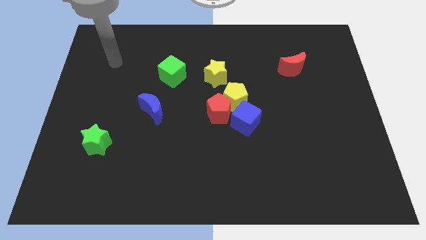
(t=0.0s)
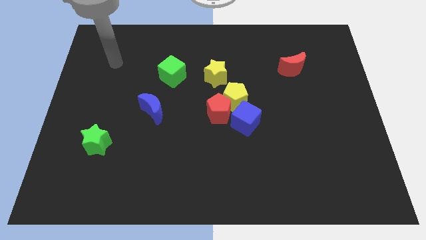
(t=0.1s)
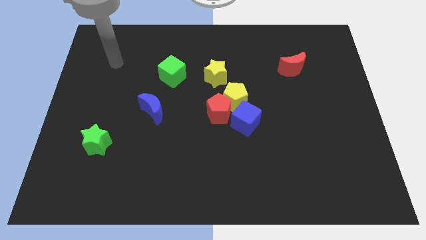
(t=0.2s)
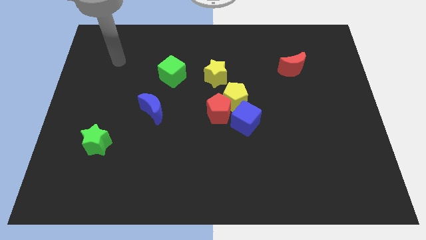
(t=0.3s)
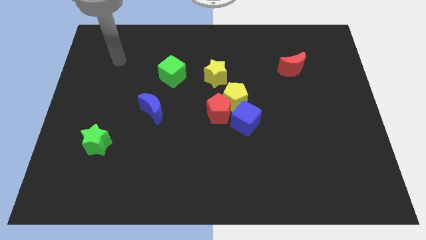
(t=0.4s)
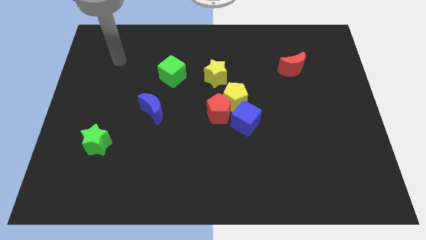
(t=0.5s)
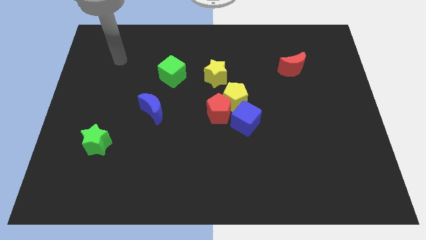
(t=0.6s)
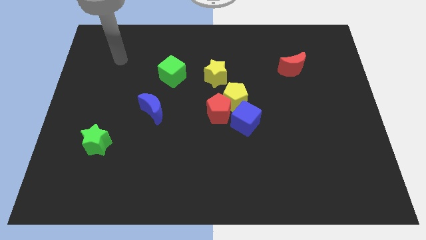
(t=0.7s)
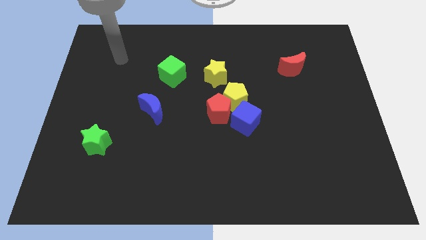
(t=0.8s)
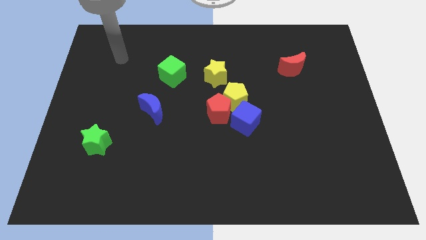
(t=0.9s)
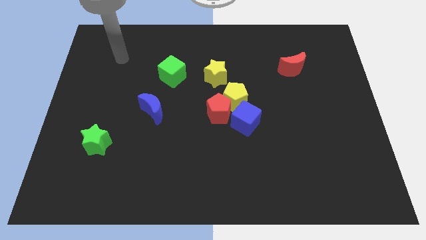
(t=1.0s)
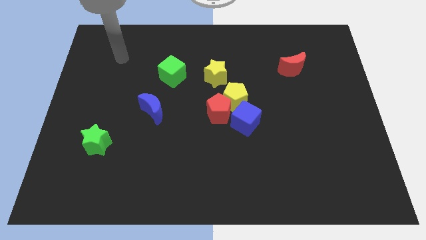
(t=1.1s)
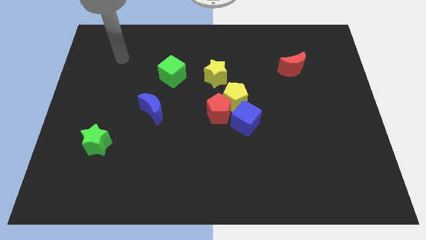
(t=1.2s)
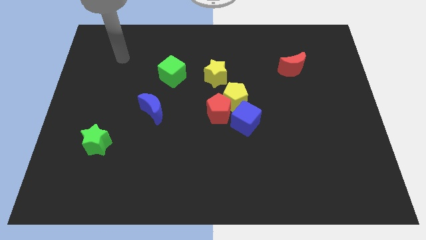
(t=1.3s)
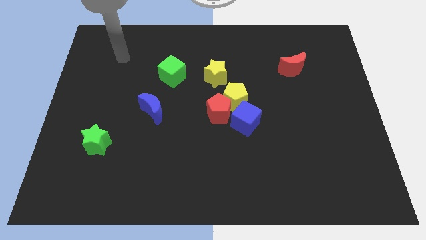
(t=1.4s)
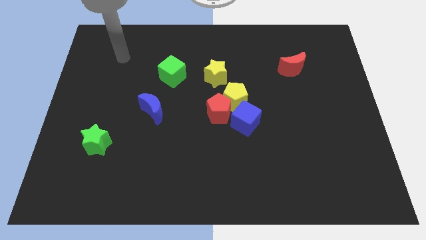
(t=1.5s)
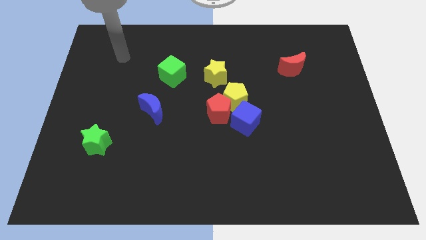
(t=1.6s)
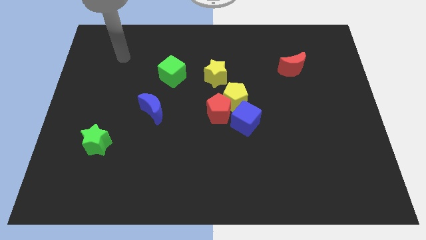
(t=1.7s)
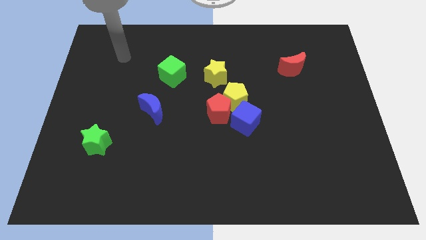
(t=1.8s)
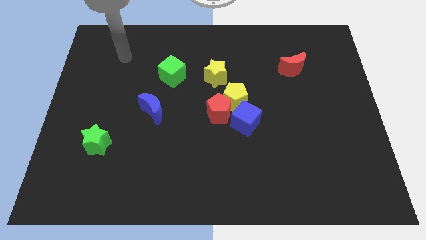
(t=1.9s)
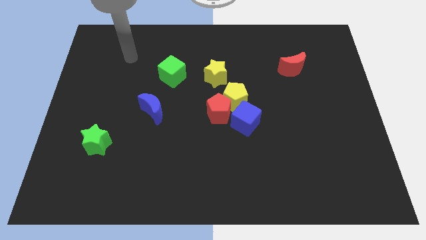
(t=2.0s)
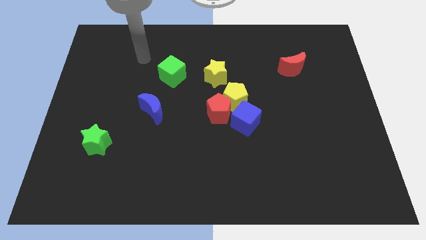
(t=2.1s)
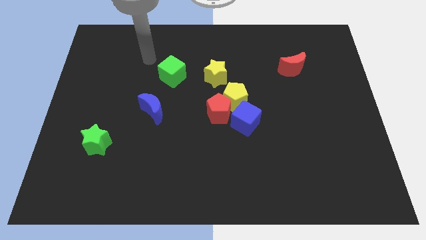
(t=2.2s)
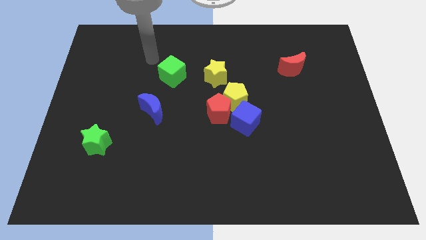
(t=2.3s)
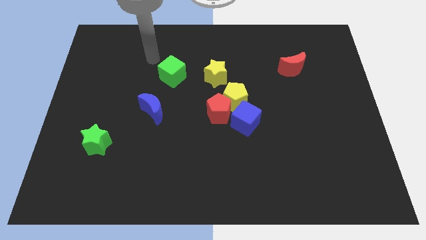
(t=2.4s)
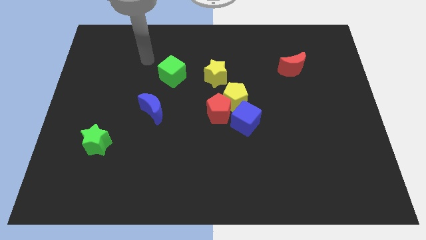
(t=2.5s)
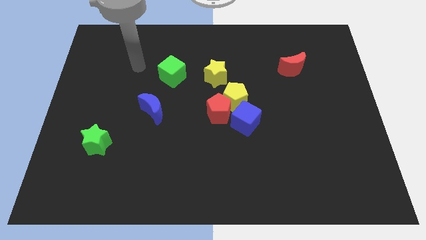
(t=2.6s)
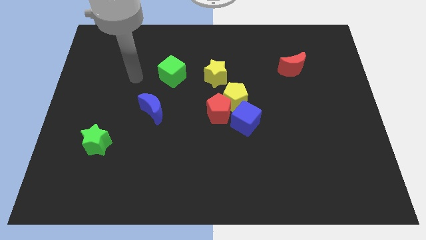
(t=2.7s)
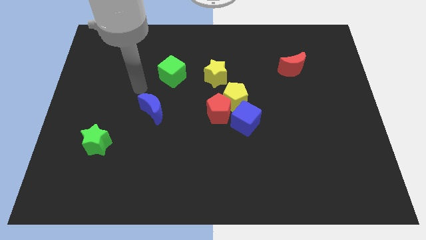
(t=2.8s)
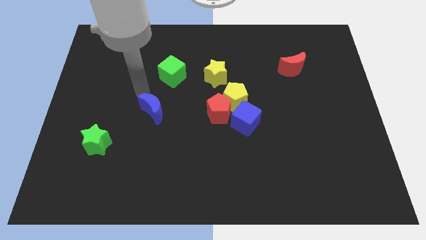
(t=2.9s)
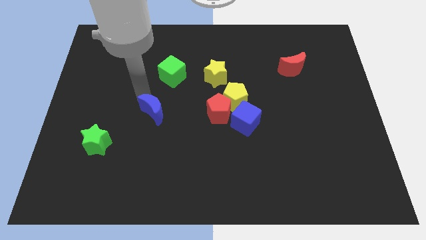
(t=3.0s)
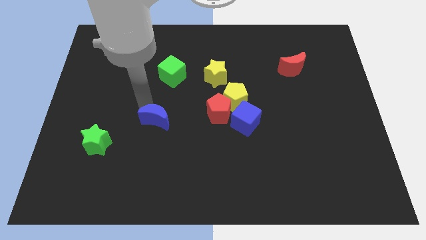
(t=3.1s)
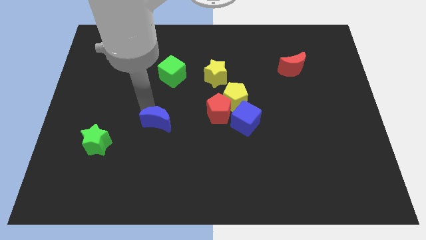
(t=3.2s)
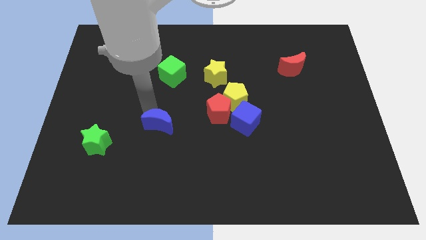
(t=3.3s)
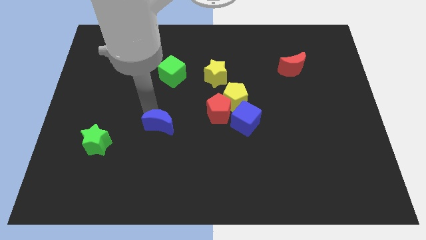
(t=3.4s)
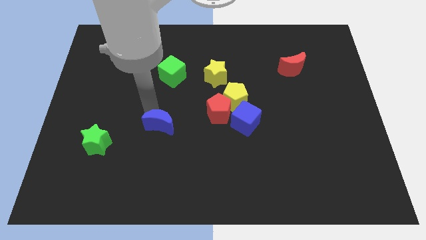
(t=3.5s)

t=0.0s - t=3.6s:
push the blue crescent towards the centre

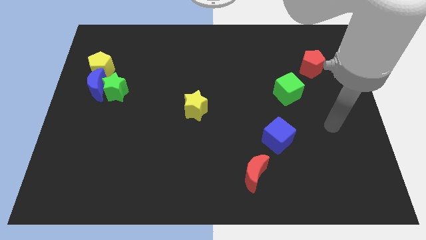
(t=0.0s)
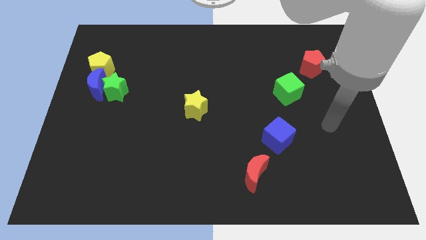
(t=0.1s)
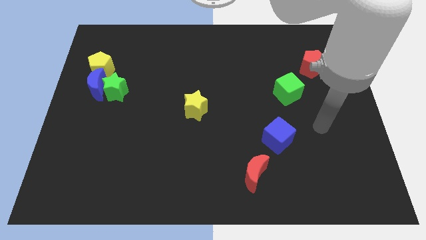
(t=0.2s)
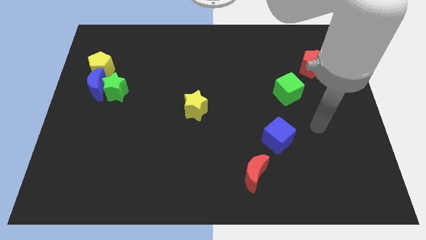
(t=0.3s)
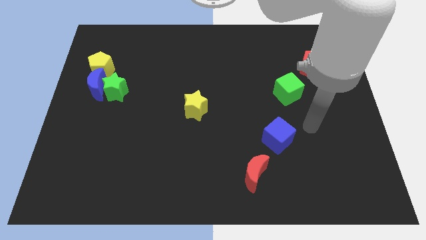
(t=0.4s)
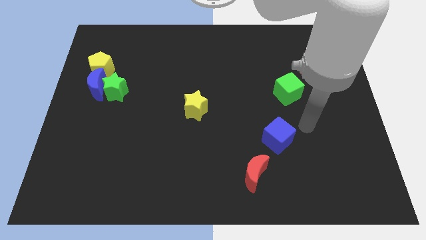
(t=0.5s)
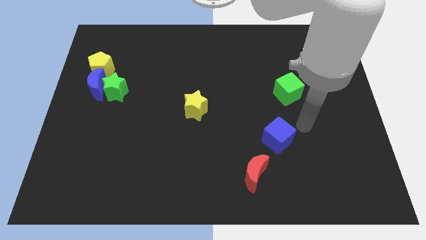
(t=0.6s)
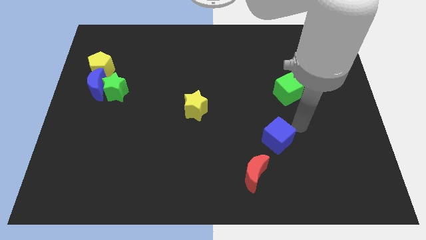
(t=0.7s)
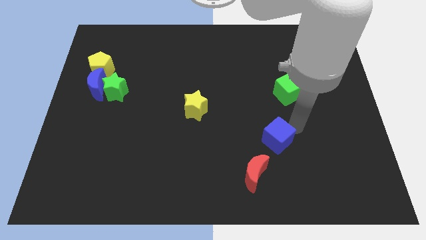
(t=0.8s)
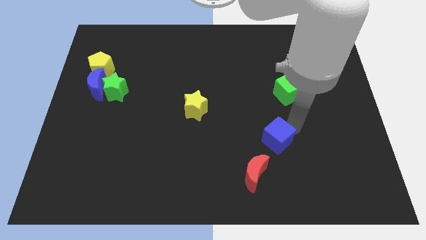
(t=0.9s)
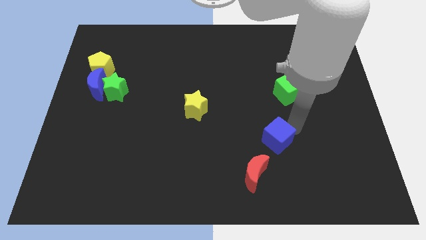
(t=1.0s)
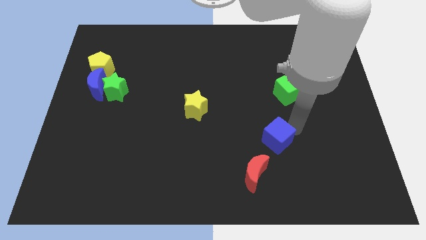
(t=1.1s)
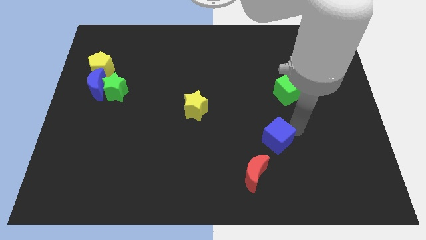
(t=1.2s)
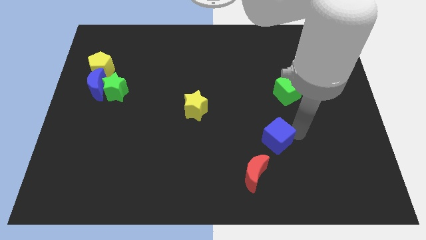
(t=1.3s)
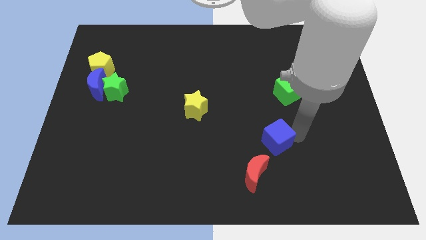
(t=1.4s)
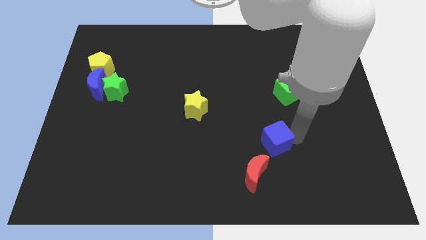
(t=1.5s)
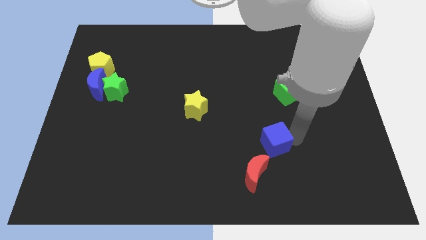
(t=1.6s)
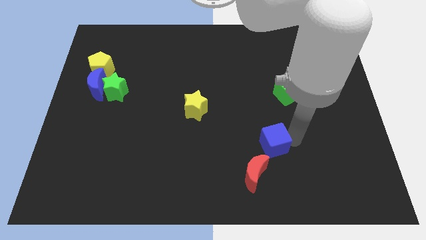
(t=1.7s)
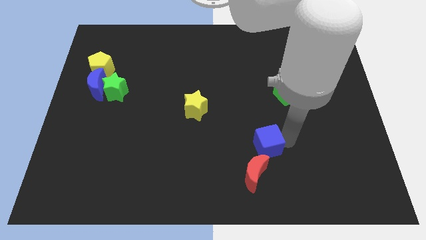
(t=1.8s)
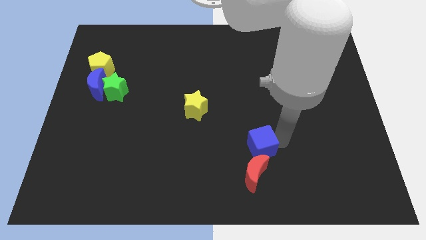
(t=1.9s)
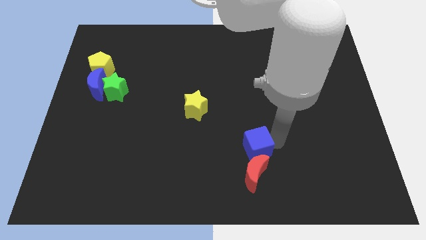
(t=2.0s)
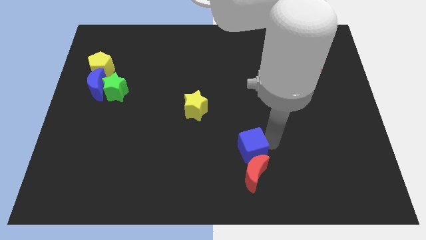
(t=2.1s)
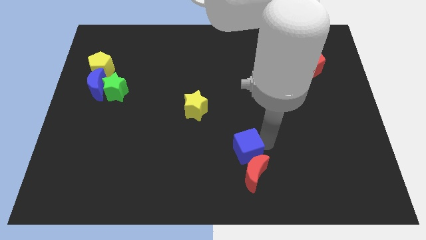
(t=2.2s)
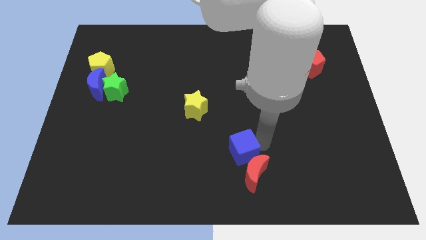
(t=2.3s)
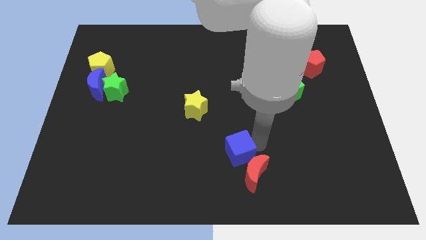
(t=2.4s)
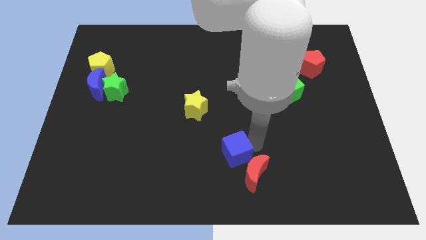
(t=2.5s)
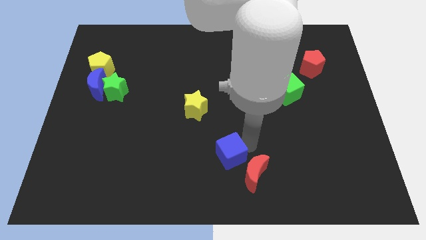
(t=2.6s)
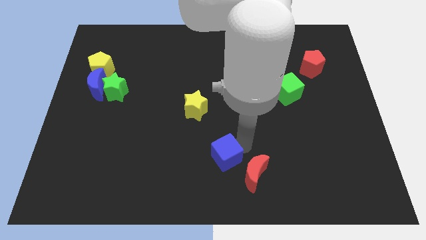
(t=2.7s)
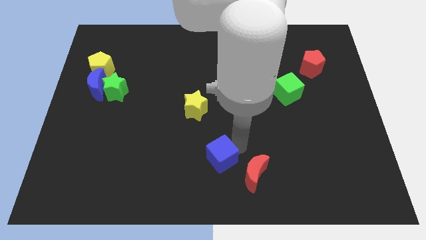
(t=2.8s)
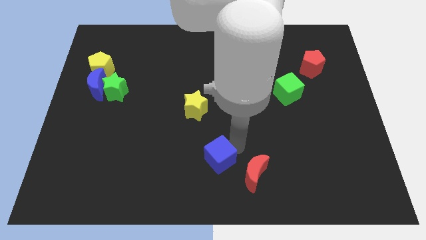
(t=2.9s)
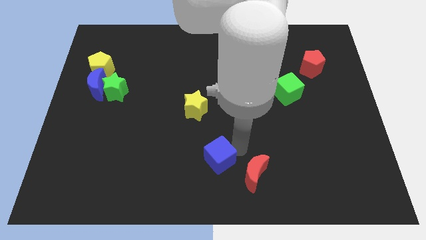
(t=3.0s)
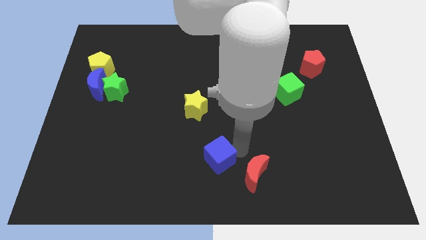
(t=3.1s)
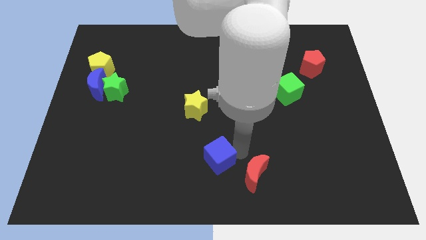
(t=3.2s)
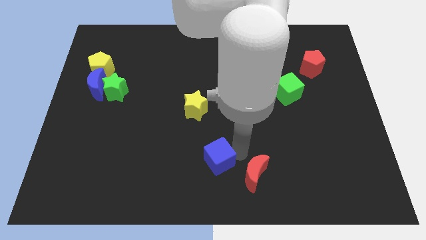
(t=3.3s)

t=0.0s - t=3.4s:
push the blue cube to top left of the red crescent

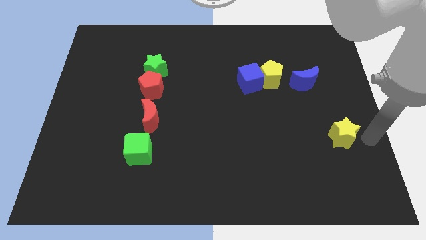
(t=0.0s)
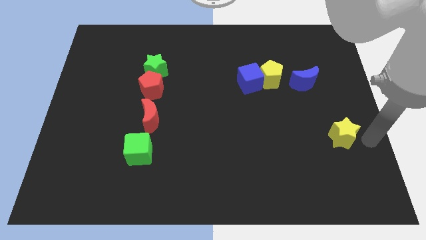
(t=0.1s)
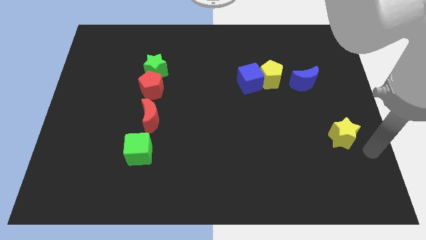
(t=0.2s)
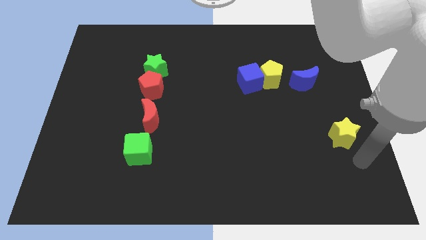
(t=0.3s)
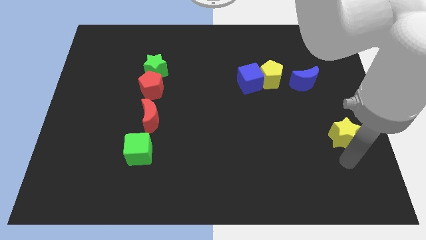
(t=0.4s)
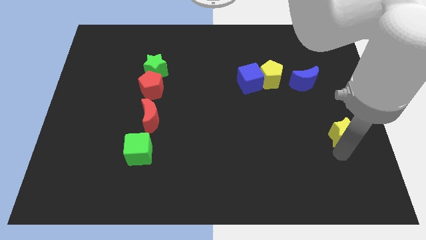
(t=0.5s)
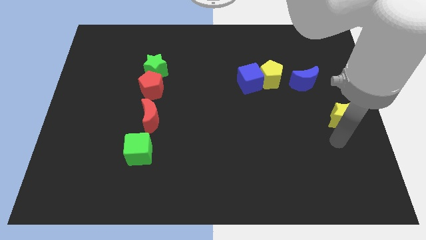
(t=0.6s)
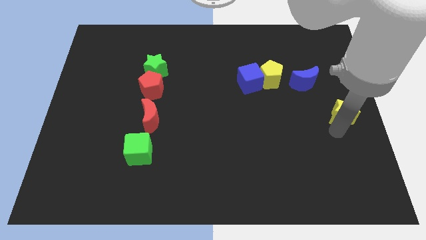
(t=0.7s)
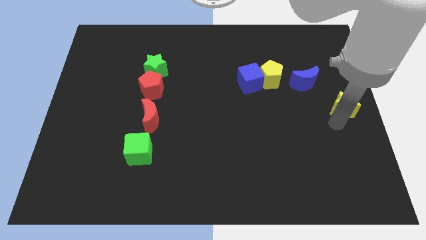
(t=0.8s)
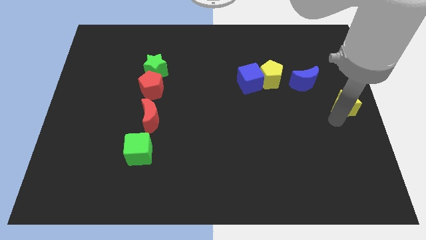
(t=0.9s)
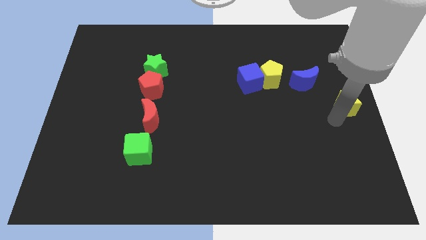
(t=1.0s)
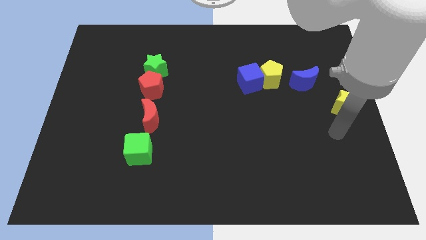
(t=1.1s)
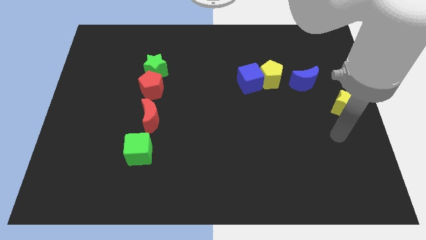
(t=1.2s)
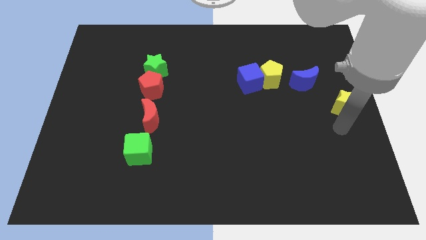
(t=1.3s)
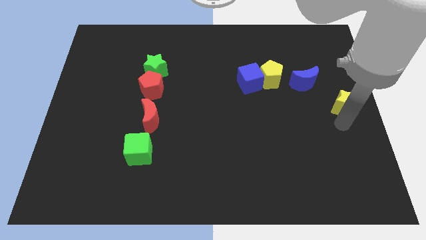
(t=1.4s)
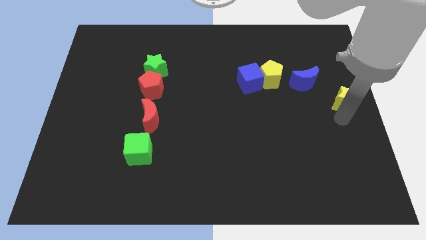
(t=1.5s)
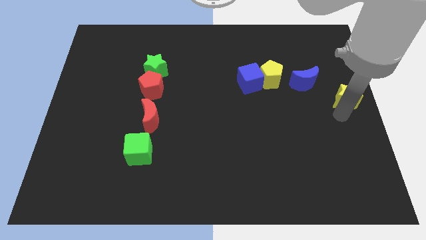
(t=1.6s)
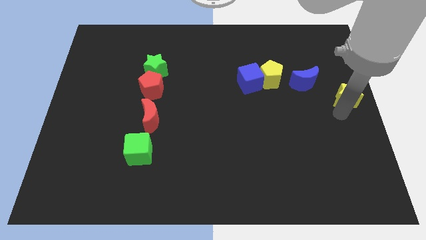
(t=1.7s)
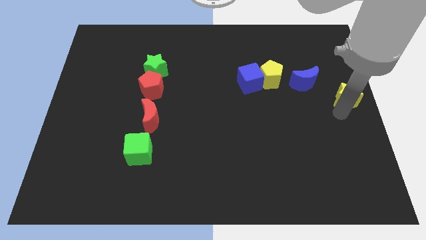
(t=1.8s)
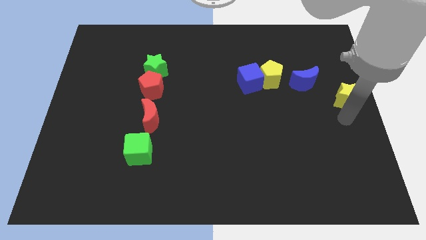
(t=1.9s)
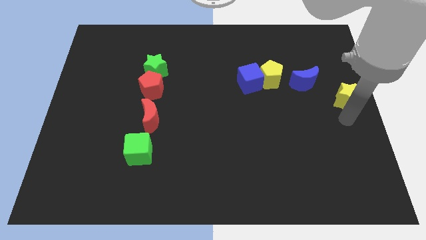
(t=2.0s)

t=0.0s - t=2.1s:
push yellow star towards the center right of the board
